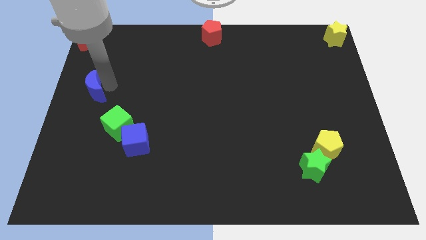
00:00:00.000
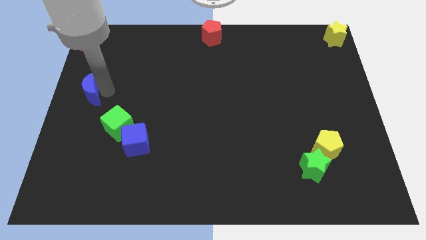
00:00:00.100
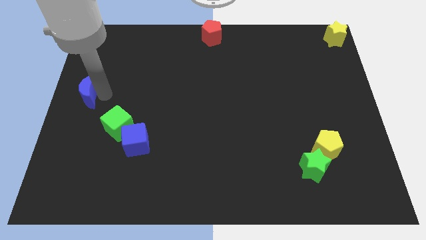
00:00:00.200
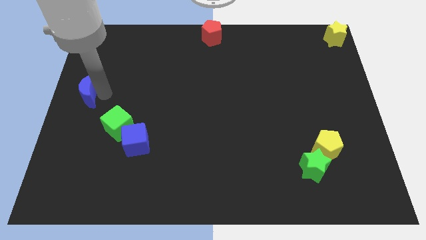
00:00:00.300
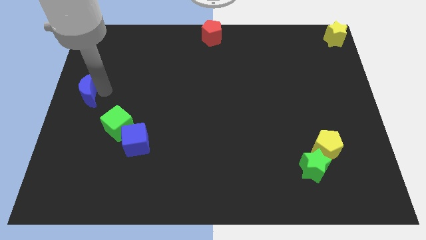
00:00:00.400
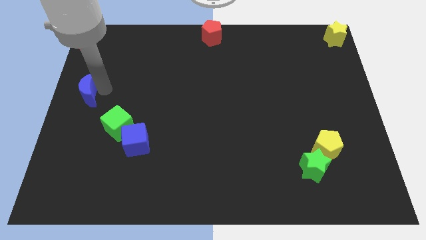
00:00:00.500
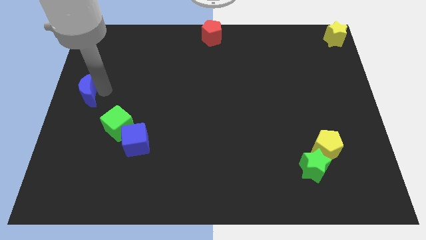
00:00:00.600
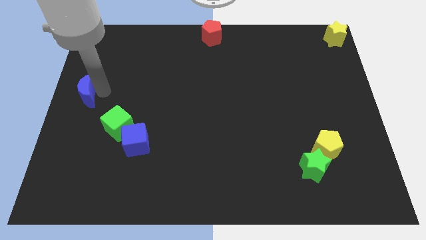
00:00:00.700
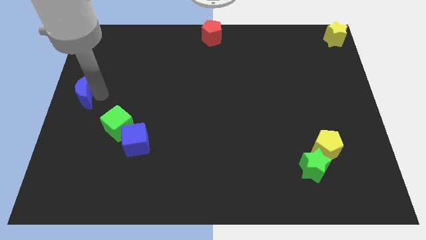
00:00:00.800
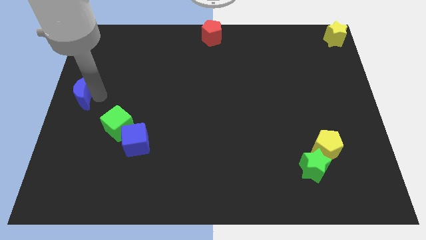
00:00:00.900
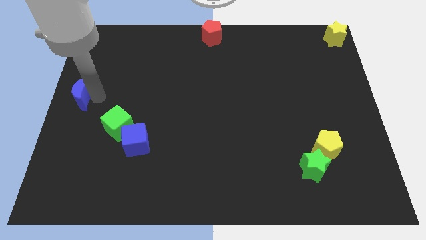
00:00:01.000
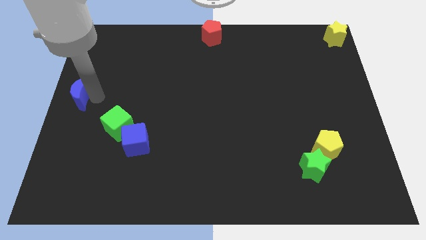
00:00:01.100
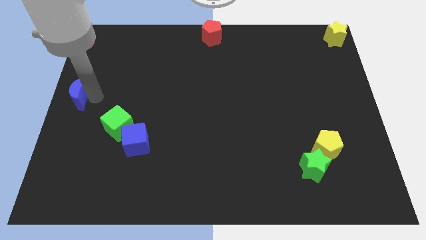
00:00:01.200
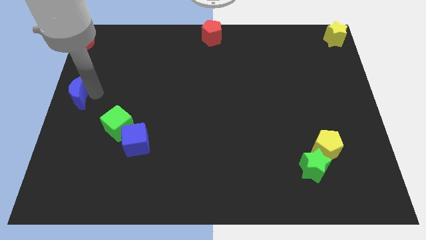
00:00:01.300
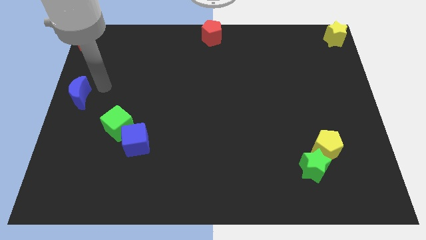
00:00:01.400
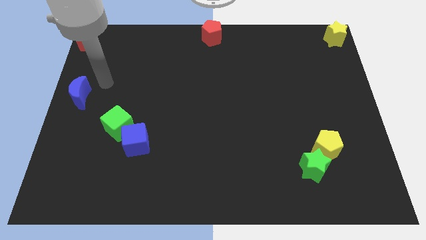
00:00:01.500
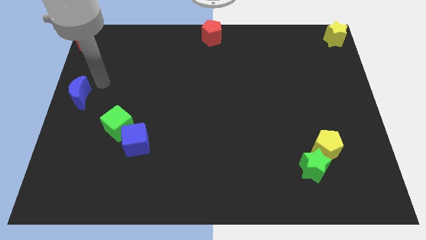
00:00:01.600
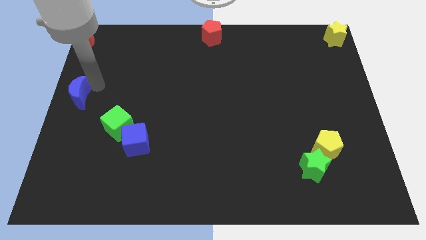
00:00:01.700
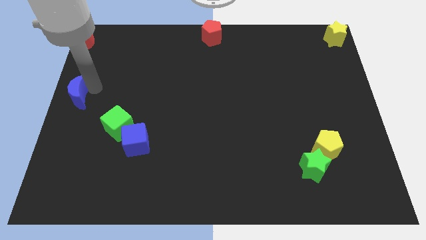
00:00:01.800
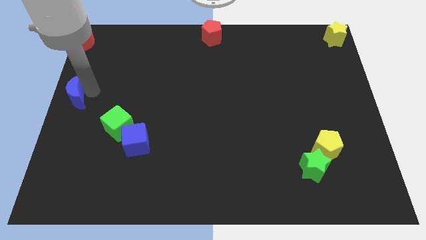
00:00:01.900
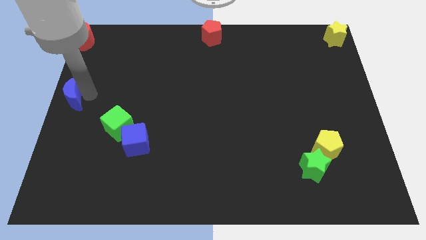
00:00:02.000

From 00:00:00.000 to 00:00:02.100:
move blue moon to the center left

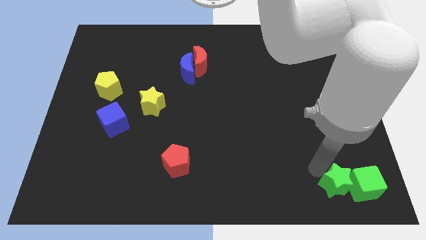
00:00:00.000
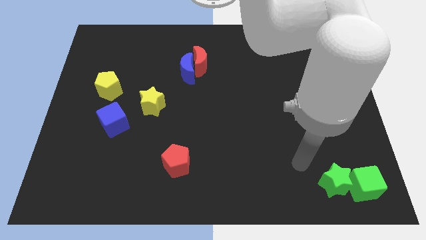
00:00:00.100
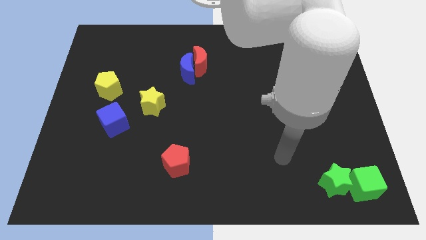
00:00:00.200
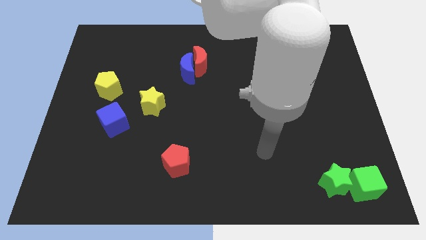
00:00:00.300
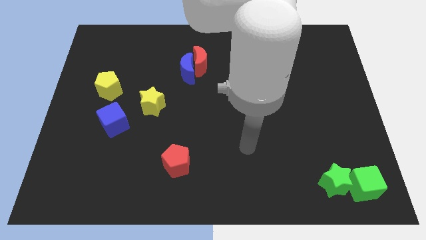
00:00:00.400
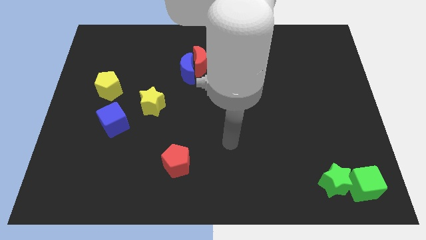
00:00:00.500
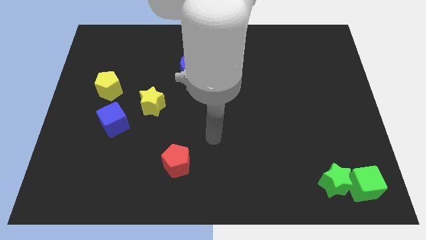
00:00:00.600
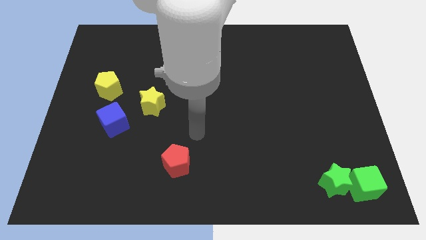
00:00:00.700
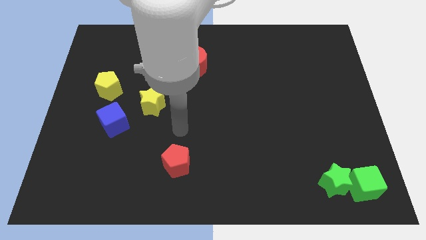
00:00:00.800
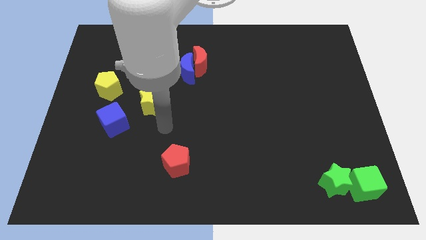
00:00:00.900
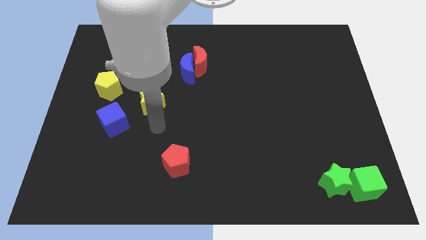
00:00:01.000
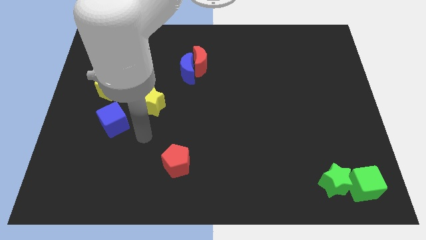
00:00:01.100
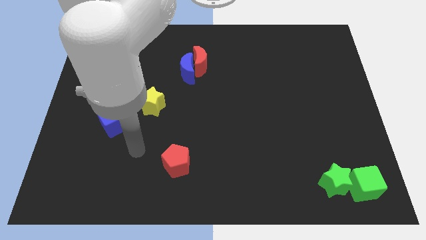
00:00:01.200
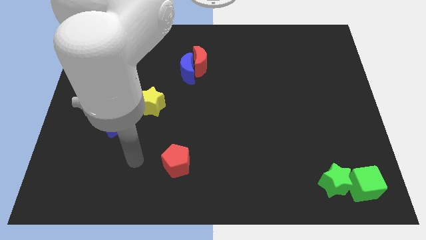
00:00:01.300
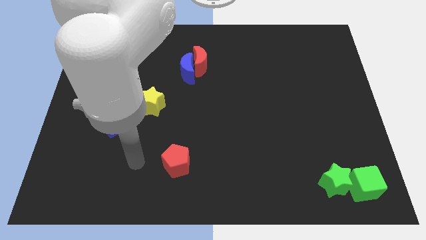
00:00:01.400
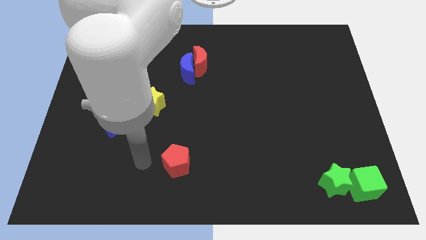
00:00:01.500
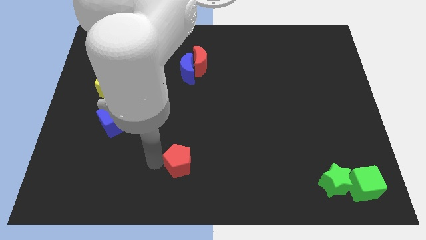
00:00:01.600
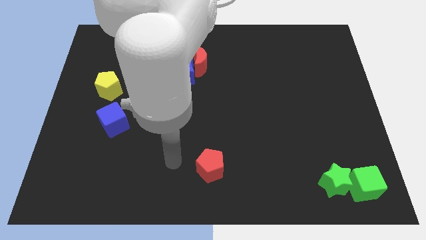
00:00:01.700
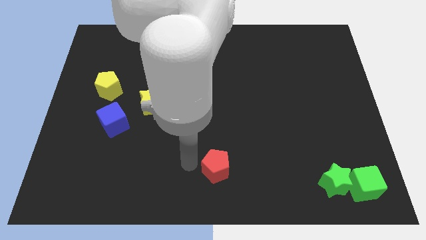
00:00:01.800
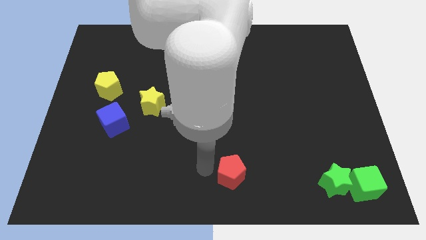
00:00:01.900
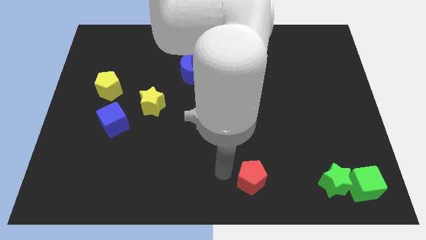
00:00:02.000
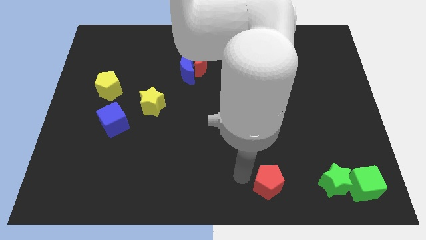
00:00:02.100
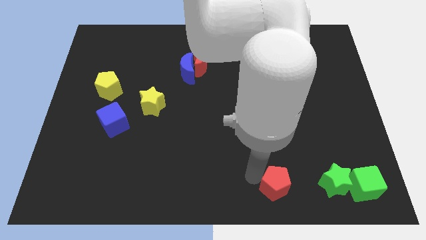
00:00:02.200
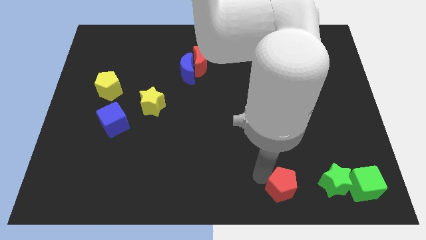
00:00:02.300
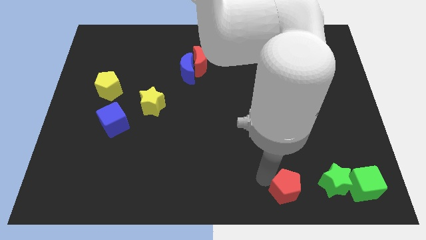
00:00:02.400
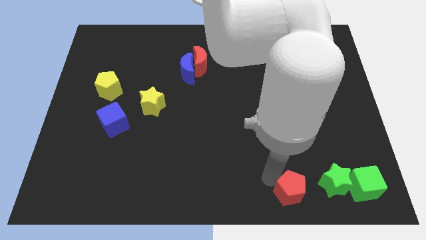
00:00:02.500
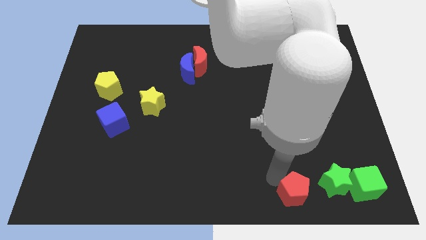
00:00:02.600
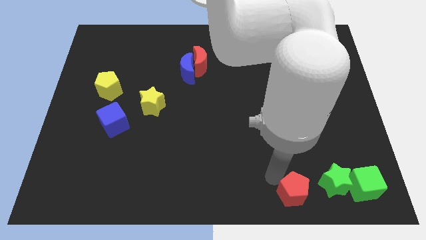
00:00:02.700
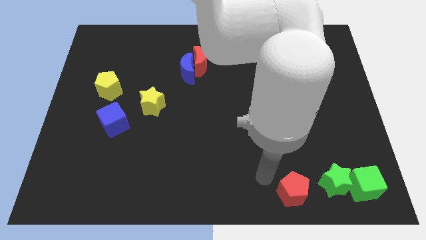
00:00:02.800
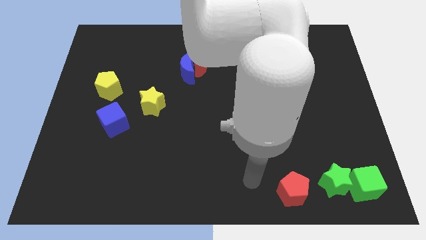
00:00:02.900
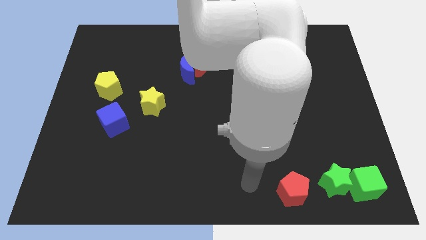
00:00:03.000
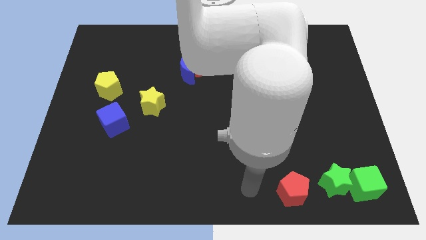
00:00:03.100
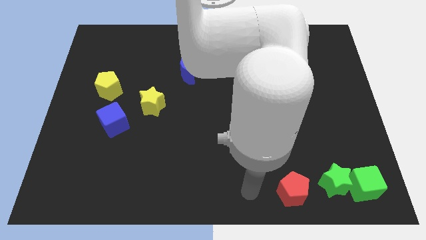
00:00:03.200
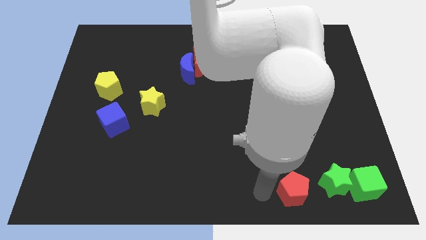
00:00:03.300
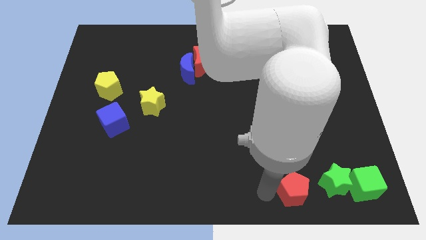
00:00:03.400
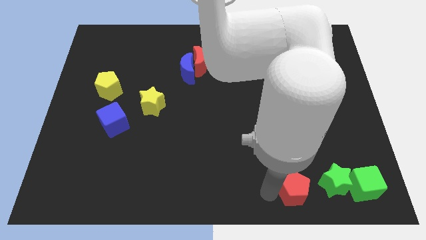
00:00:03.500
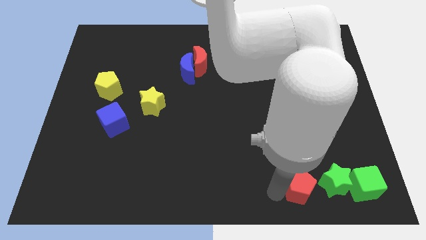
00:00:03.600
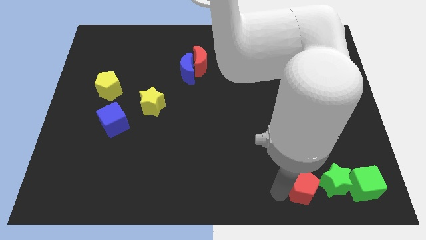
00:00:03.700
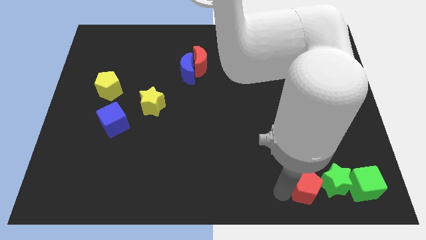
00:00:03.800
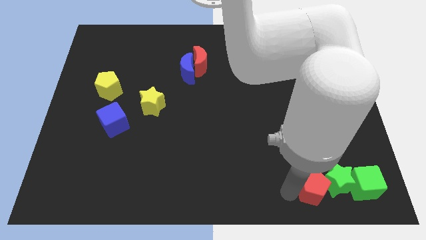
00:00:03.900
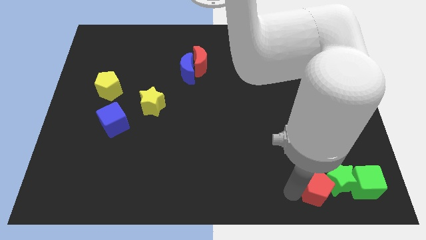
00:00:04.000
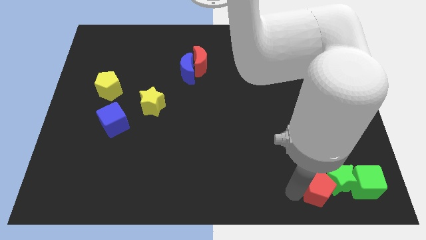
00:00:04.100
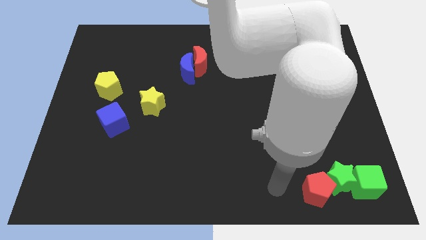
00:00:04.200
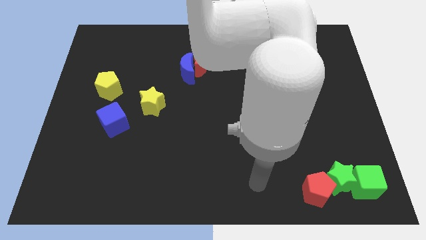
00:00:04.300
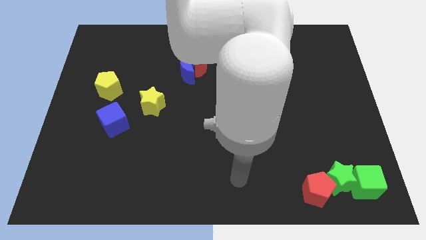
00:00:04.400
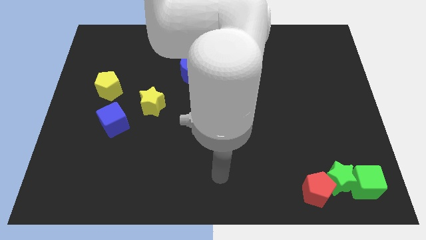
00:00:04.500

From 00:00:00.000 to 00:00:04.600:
push the red pentagon into the green blocks

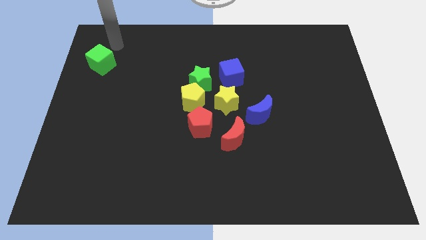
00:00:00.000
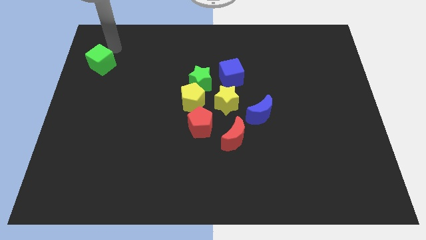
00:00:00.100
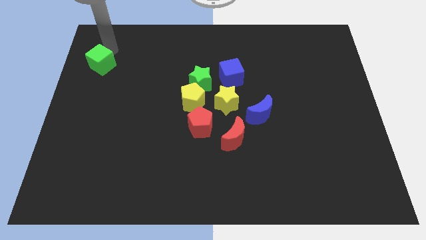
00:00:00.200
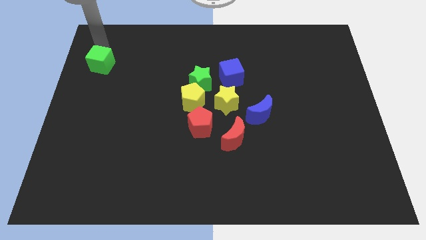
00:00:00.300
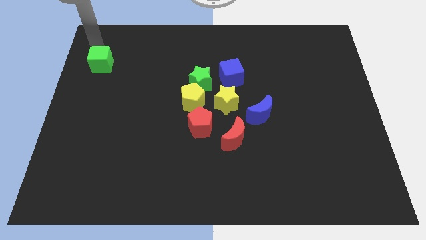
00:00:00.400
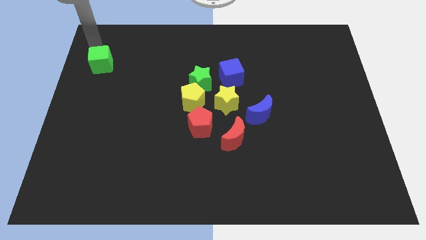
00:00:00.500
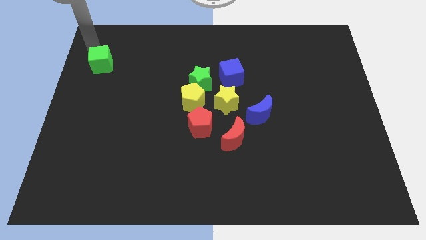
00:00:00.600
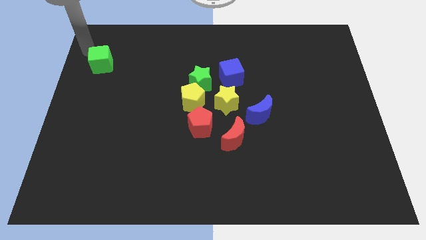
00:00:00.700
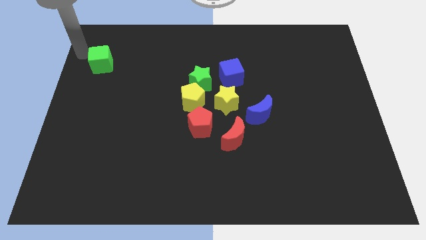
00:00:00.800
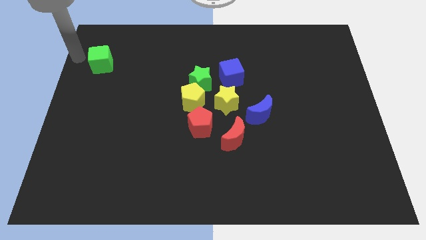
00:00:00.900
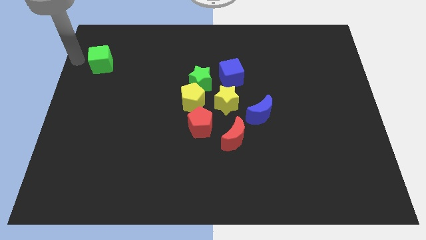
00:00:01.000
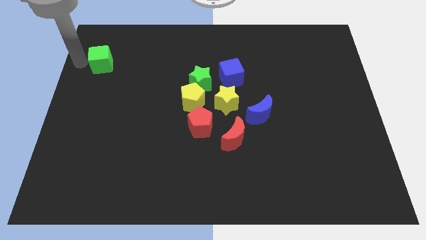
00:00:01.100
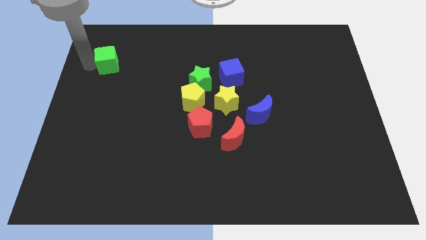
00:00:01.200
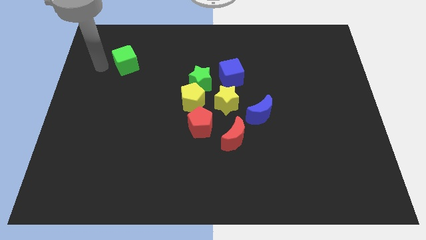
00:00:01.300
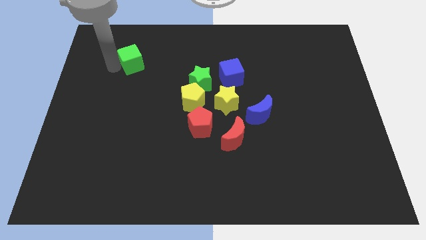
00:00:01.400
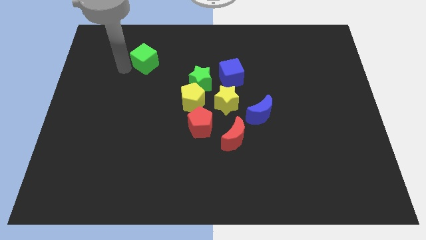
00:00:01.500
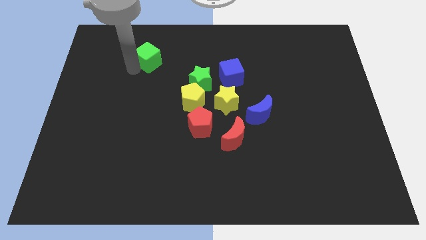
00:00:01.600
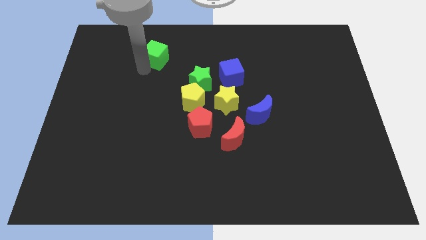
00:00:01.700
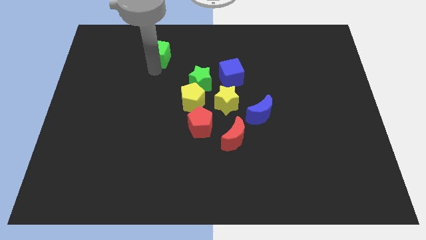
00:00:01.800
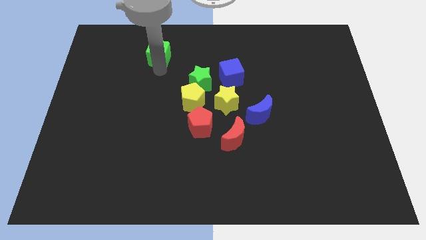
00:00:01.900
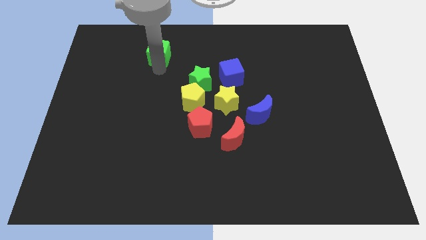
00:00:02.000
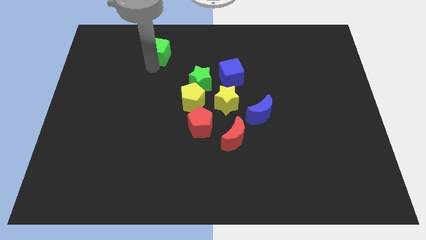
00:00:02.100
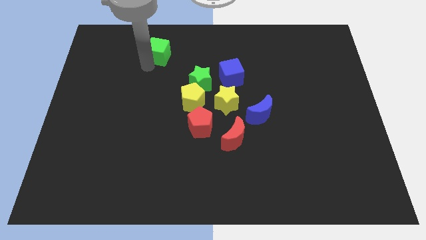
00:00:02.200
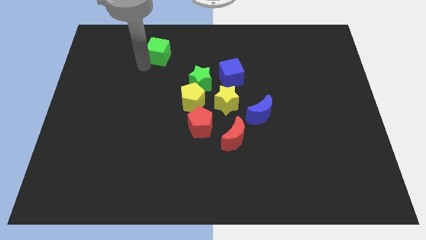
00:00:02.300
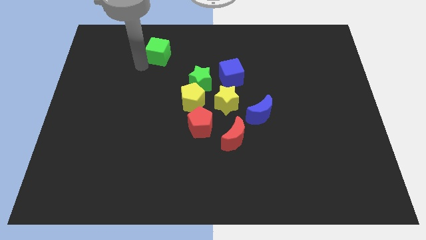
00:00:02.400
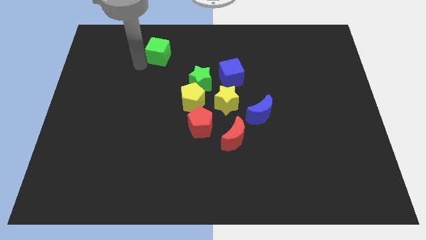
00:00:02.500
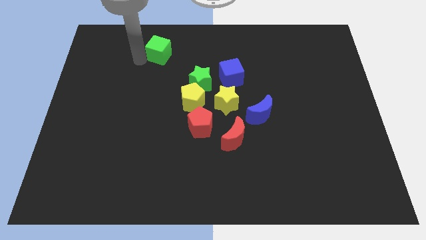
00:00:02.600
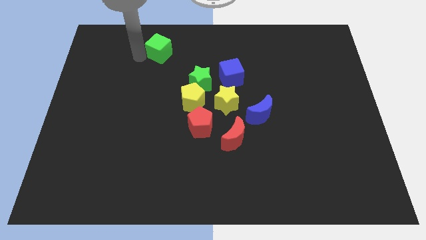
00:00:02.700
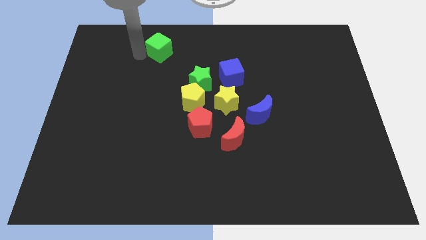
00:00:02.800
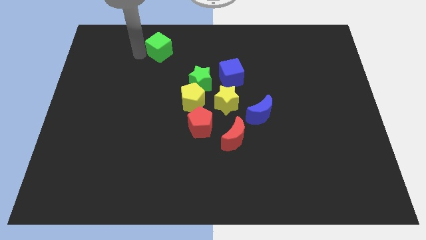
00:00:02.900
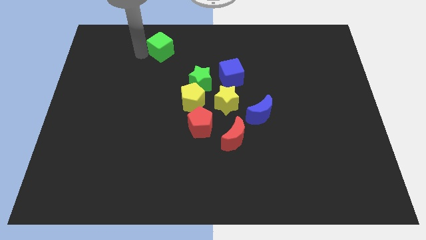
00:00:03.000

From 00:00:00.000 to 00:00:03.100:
move the green cube towards the top center
